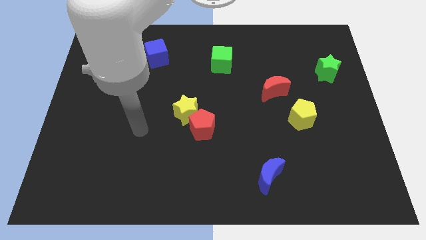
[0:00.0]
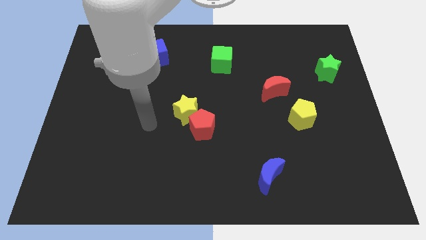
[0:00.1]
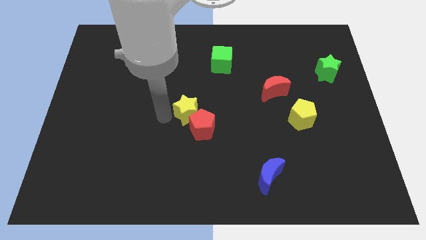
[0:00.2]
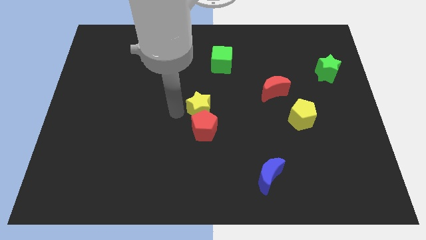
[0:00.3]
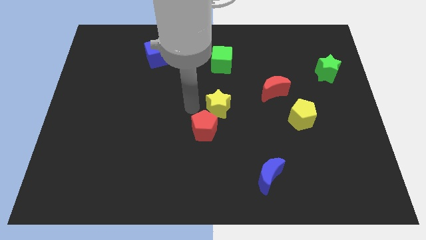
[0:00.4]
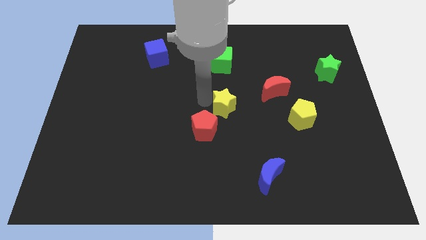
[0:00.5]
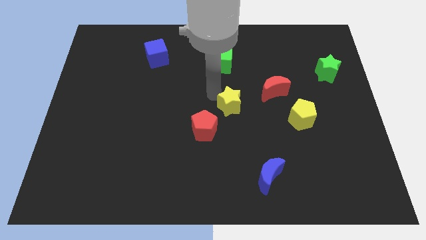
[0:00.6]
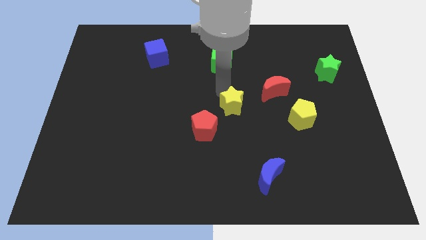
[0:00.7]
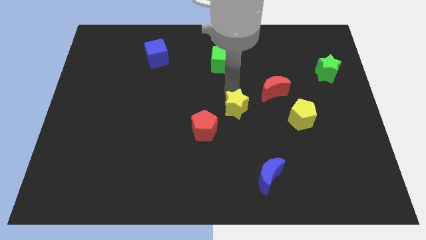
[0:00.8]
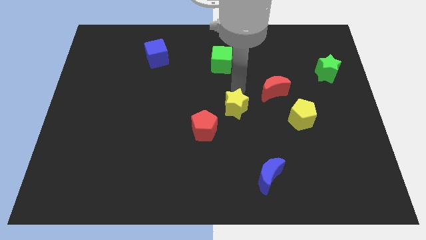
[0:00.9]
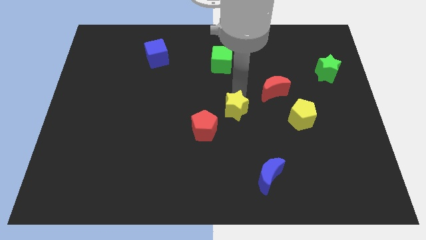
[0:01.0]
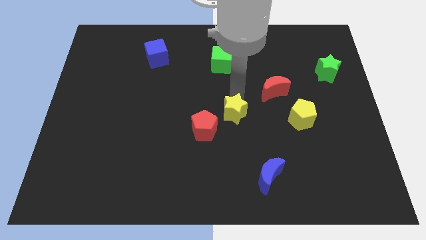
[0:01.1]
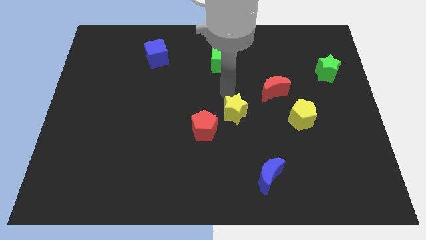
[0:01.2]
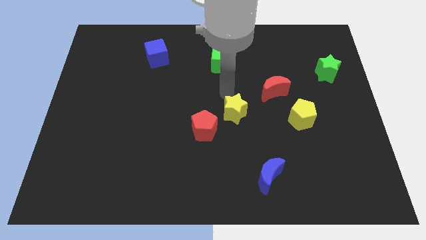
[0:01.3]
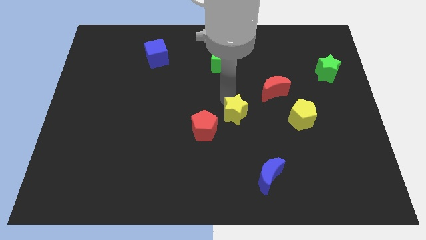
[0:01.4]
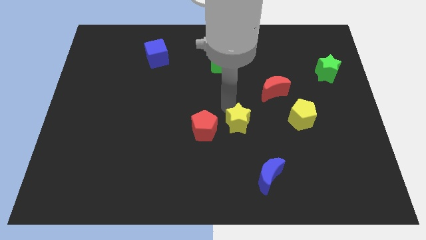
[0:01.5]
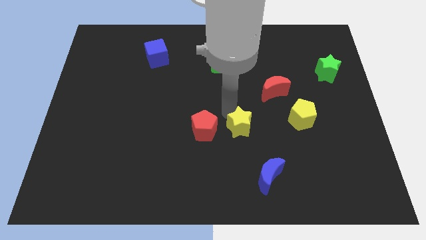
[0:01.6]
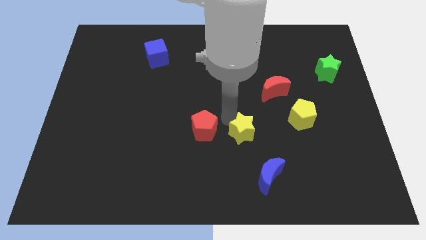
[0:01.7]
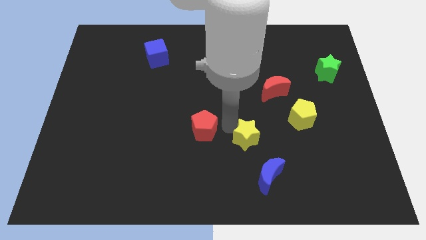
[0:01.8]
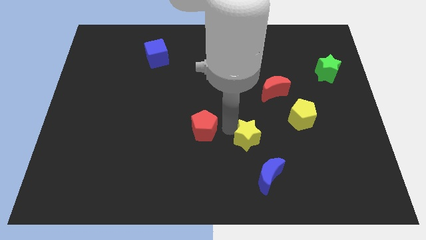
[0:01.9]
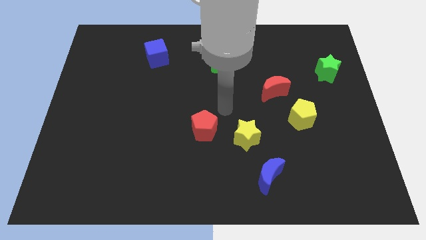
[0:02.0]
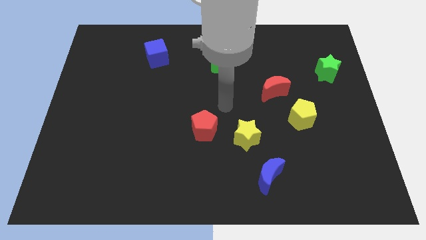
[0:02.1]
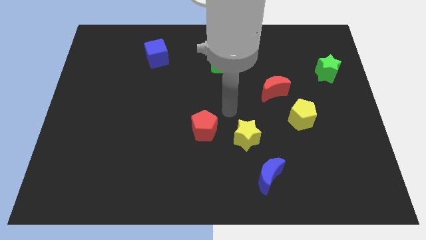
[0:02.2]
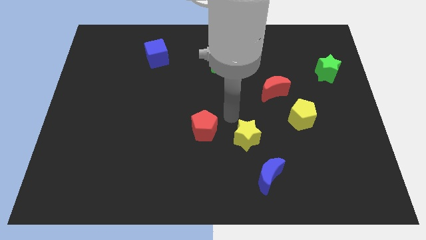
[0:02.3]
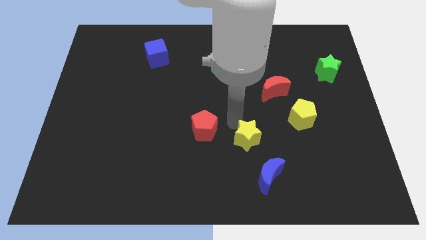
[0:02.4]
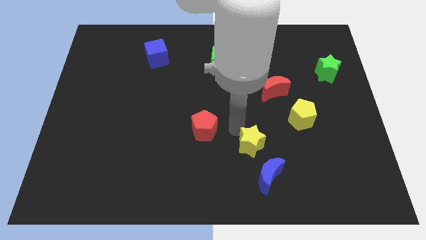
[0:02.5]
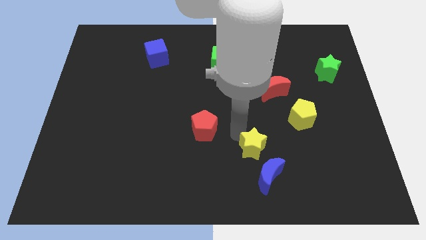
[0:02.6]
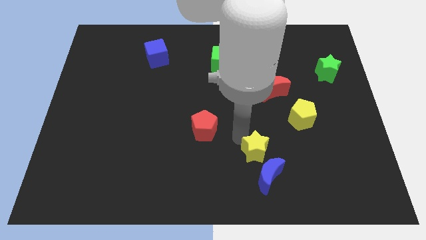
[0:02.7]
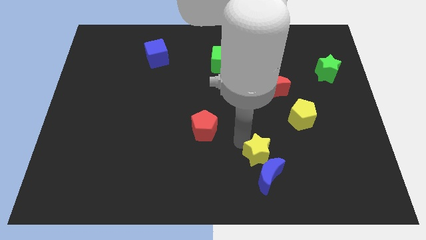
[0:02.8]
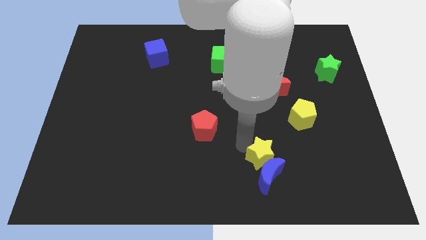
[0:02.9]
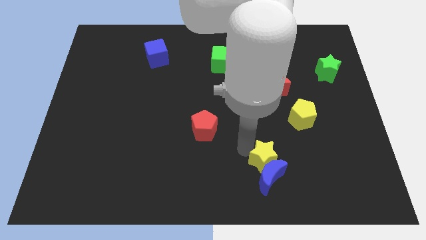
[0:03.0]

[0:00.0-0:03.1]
put the yellow star next to the blue moon

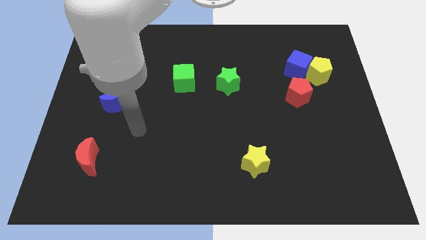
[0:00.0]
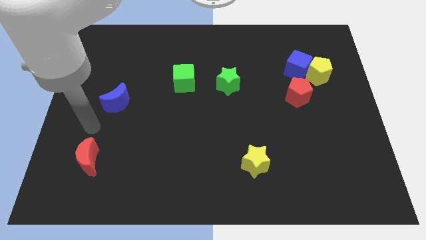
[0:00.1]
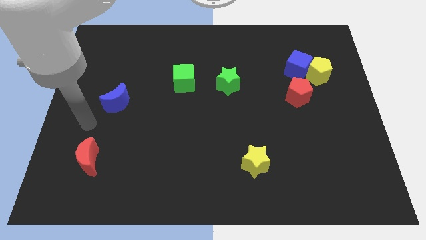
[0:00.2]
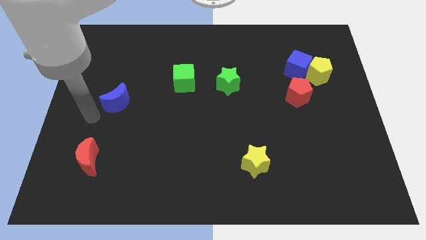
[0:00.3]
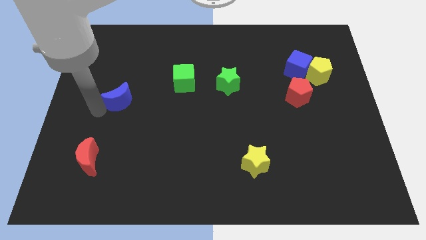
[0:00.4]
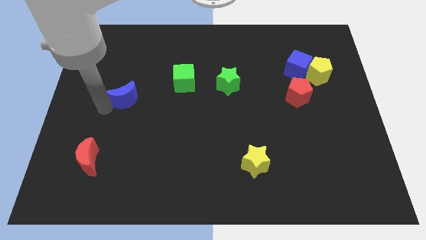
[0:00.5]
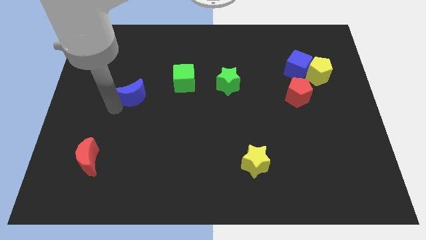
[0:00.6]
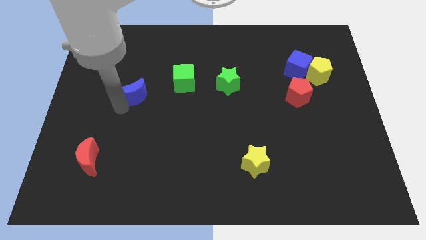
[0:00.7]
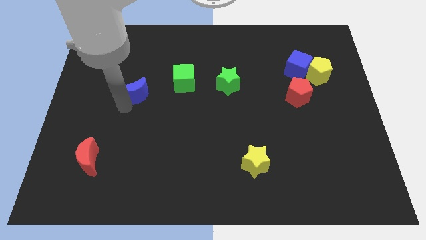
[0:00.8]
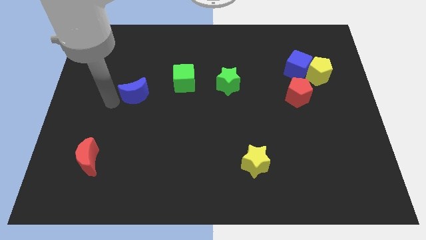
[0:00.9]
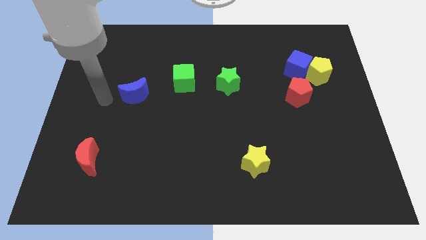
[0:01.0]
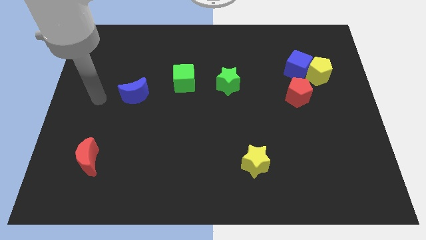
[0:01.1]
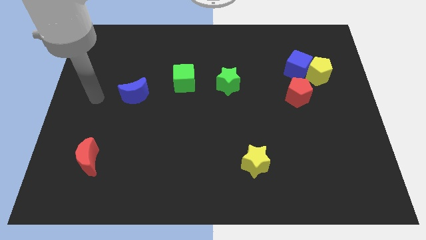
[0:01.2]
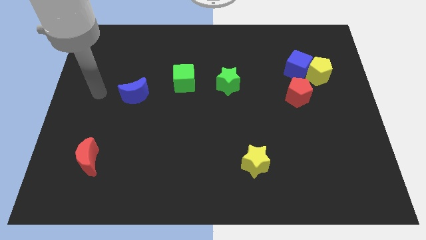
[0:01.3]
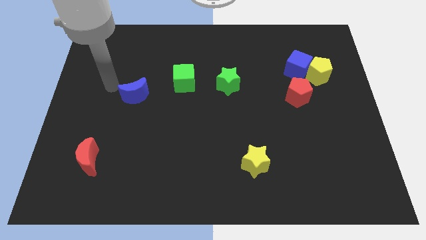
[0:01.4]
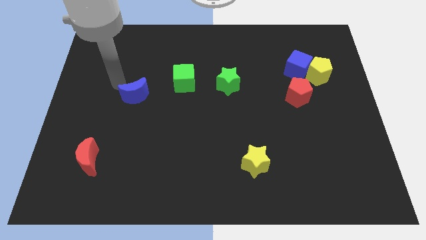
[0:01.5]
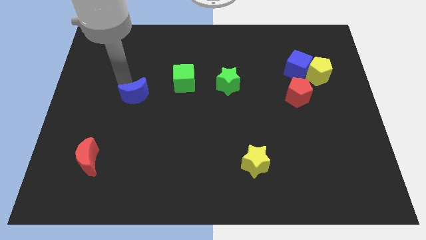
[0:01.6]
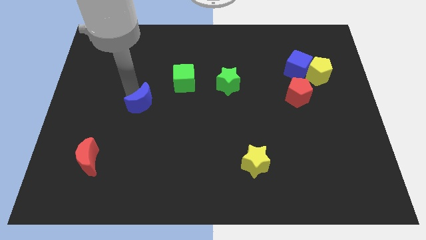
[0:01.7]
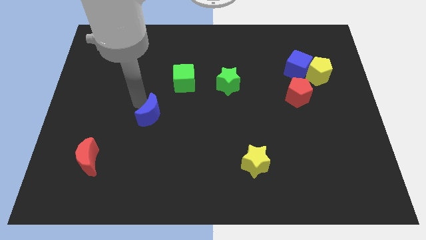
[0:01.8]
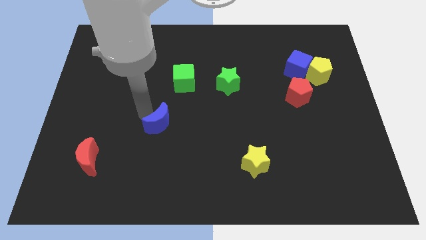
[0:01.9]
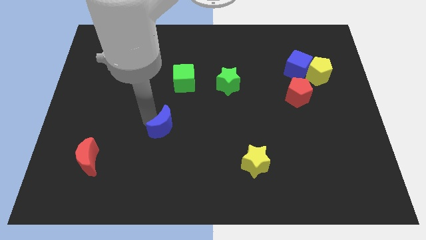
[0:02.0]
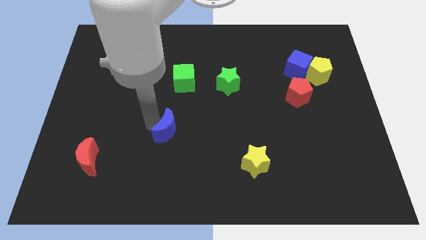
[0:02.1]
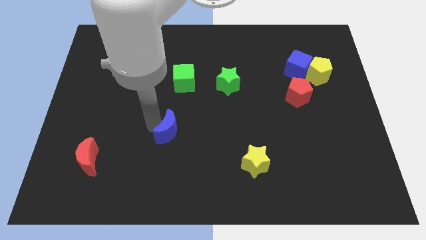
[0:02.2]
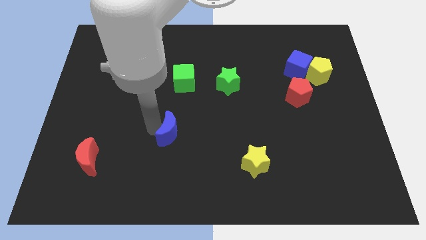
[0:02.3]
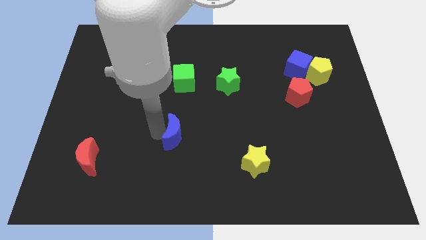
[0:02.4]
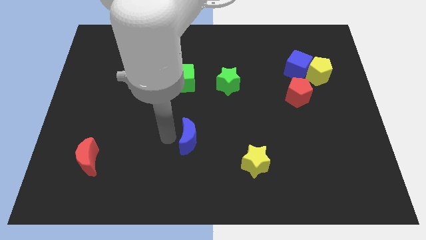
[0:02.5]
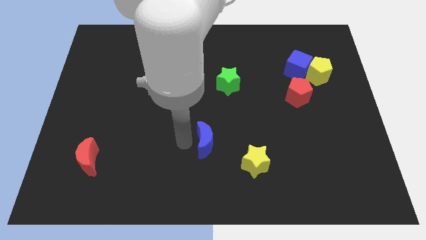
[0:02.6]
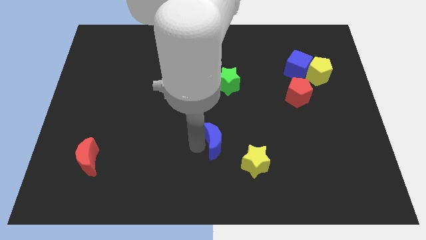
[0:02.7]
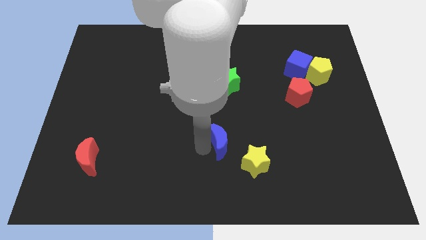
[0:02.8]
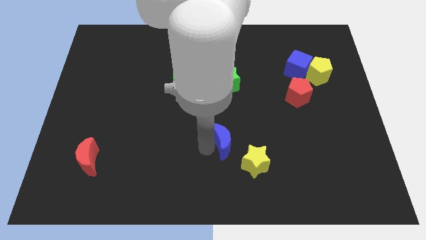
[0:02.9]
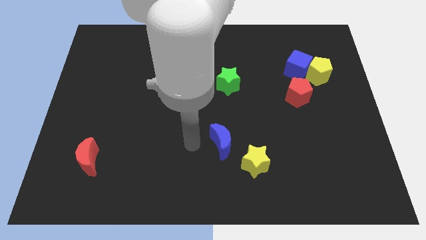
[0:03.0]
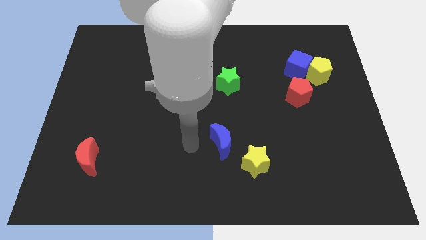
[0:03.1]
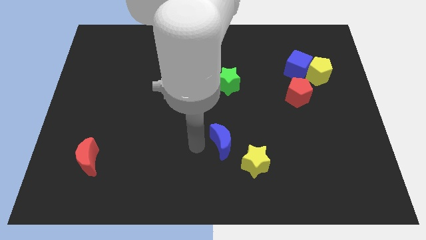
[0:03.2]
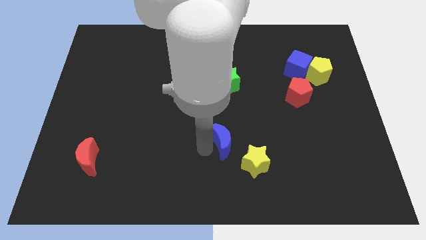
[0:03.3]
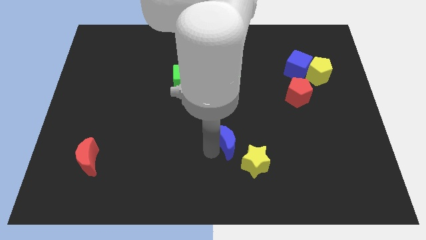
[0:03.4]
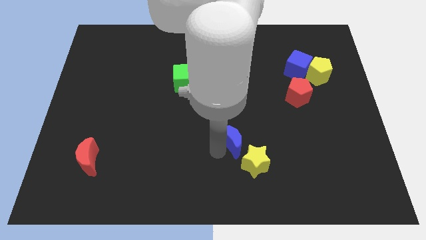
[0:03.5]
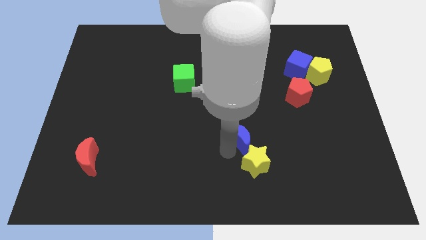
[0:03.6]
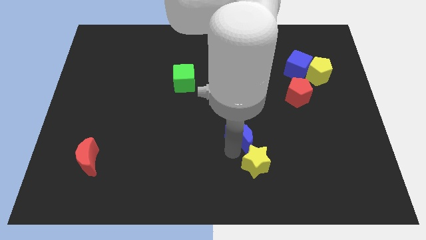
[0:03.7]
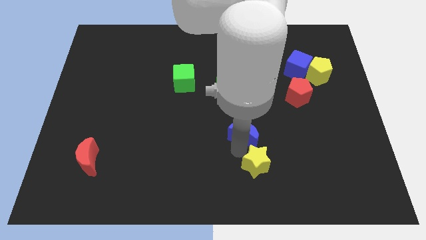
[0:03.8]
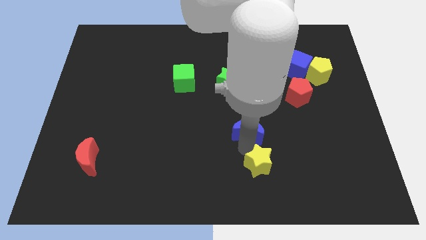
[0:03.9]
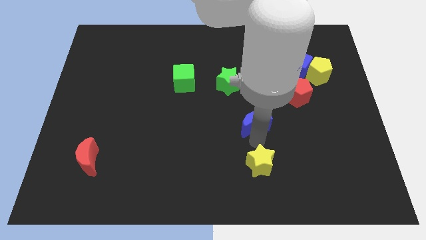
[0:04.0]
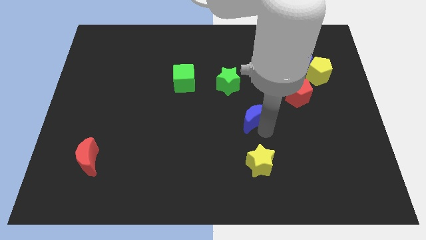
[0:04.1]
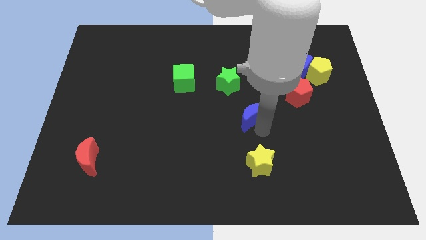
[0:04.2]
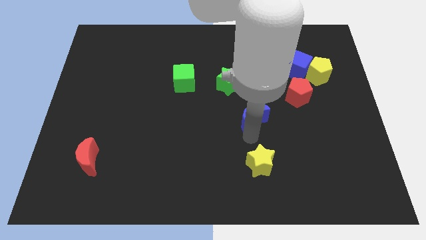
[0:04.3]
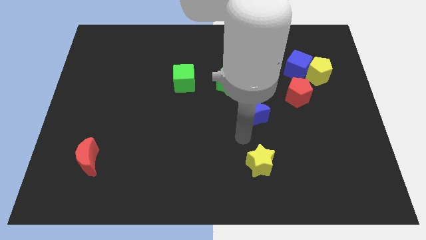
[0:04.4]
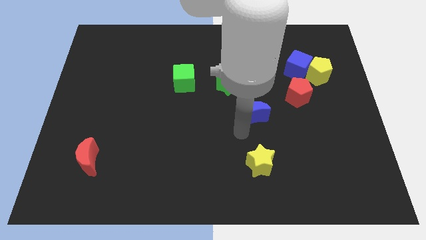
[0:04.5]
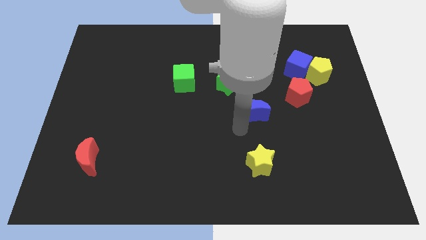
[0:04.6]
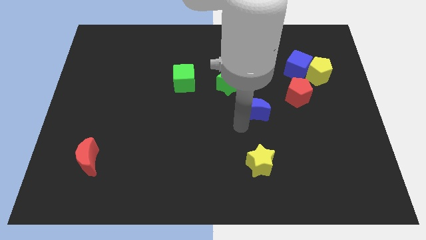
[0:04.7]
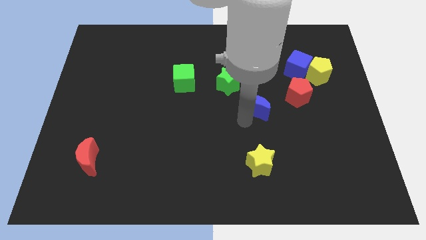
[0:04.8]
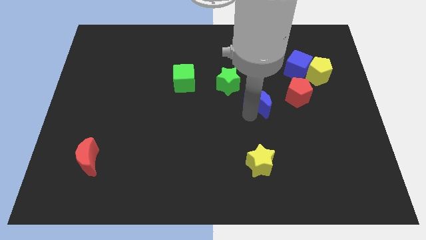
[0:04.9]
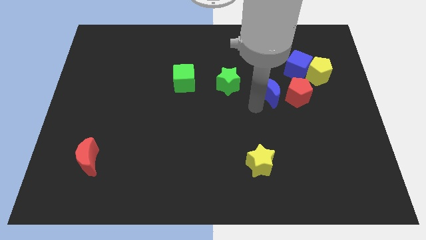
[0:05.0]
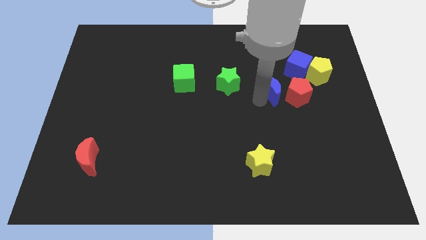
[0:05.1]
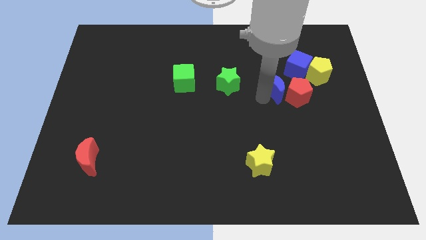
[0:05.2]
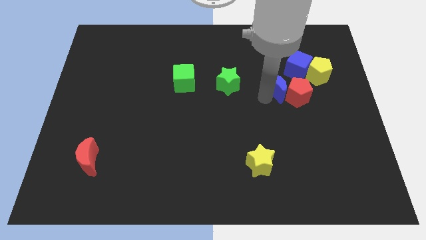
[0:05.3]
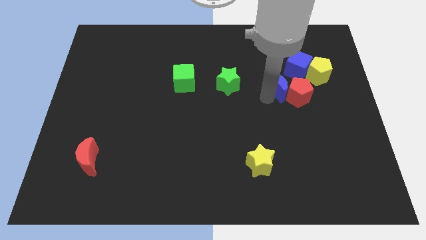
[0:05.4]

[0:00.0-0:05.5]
put the blue moon to the red pentagon

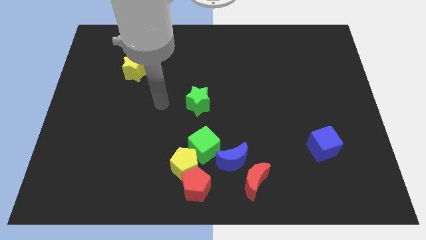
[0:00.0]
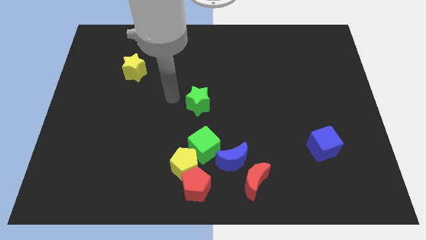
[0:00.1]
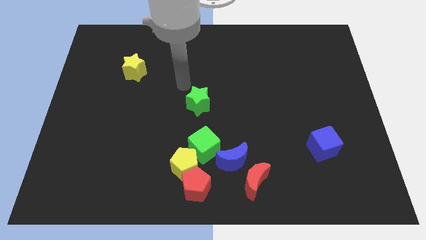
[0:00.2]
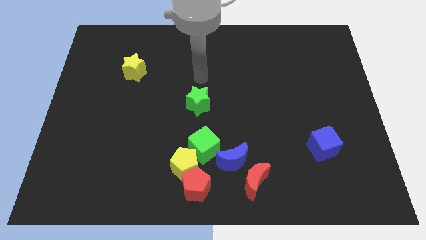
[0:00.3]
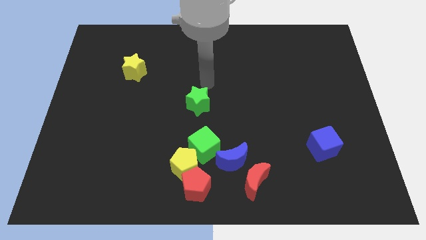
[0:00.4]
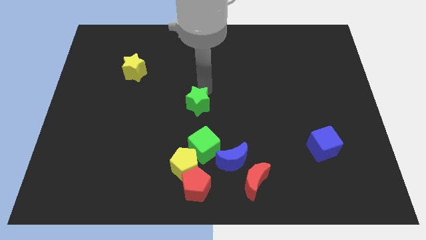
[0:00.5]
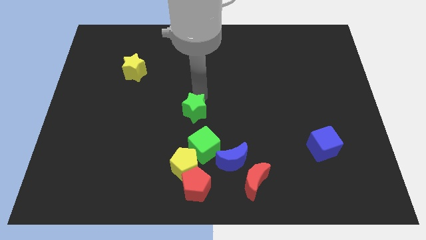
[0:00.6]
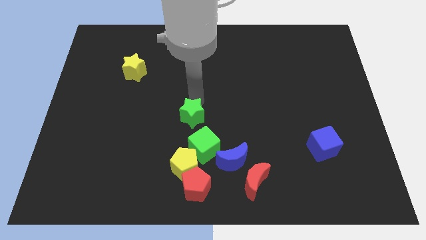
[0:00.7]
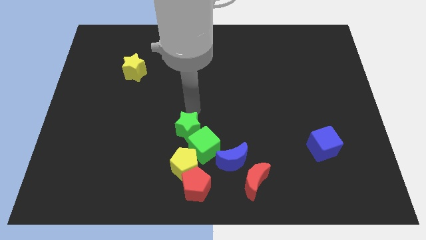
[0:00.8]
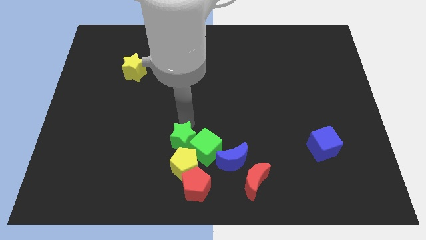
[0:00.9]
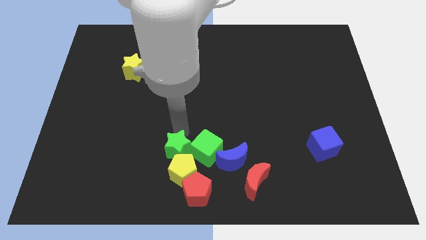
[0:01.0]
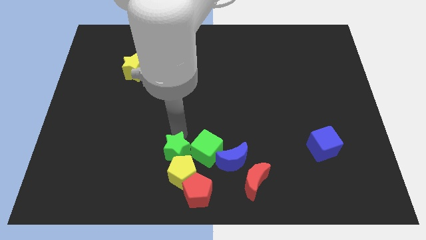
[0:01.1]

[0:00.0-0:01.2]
push the green star next to the yellow pentagon
